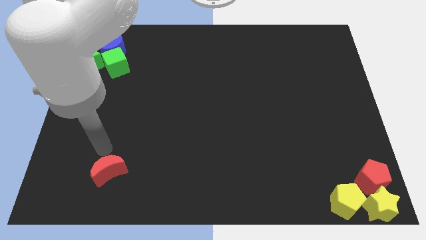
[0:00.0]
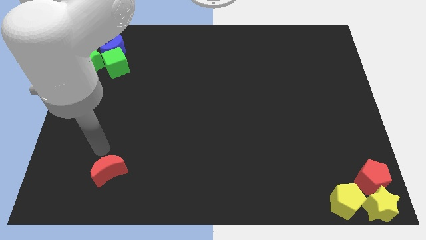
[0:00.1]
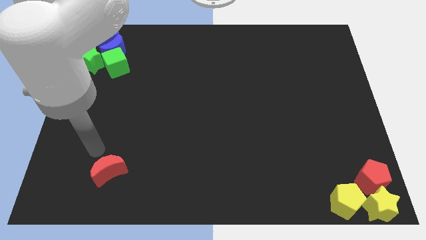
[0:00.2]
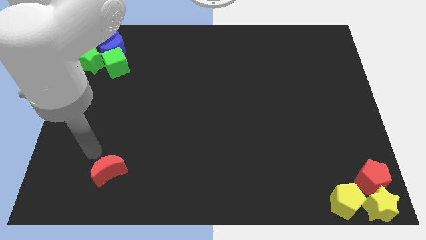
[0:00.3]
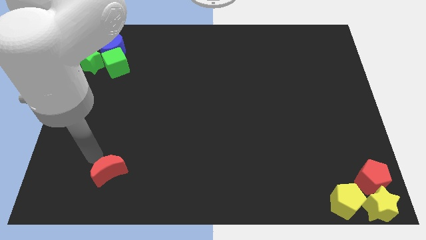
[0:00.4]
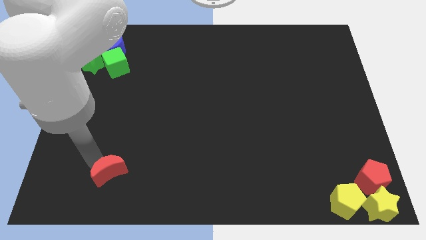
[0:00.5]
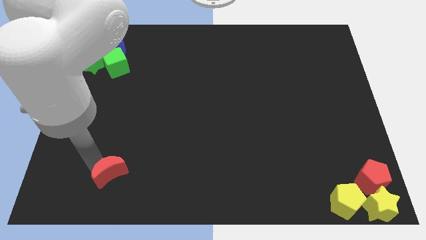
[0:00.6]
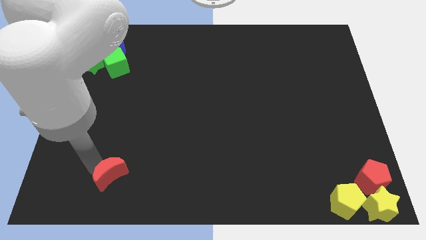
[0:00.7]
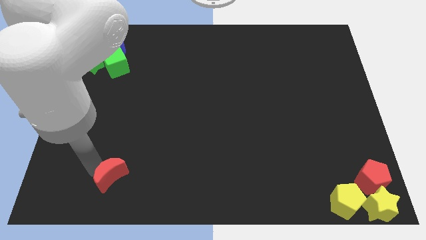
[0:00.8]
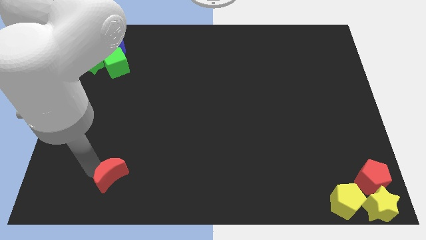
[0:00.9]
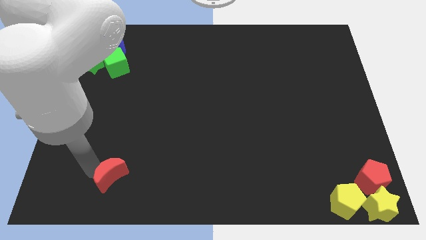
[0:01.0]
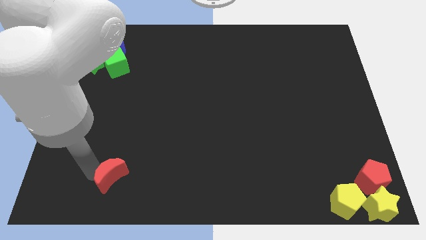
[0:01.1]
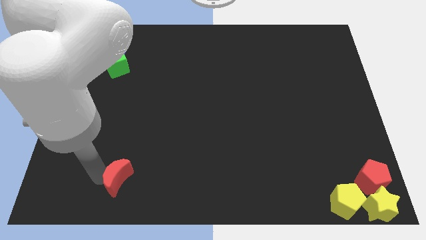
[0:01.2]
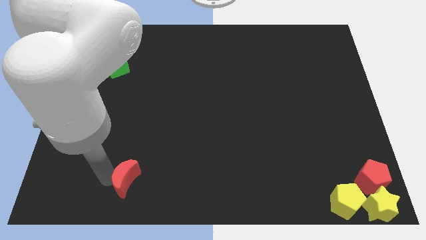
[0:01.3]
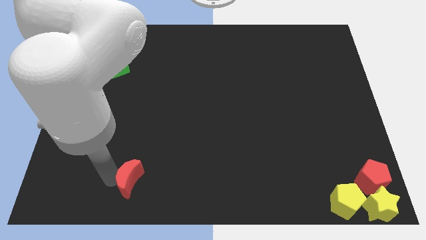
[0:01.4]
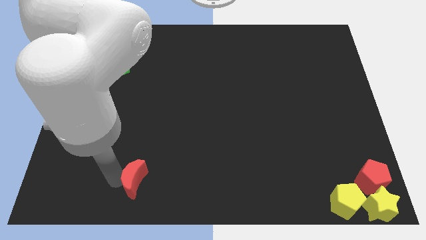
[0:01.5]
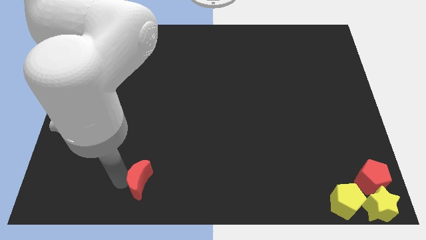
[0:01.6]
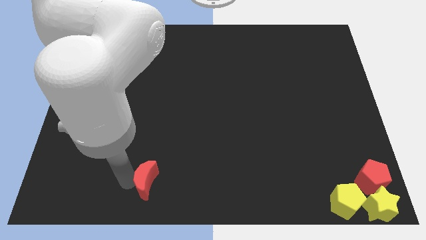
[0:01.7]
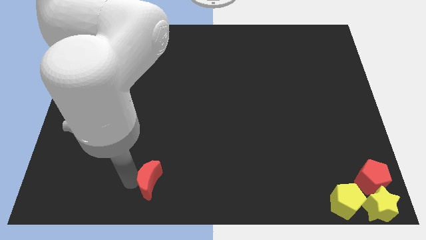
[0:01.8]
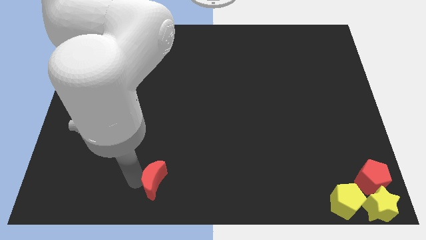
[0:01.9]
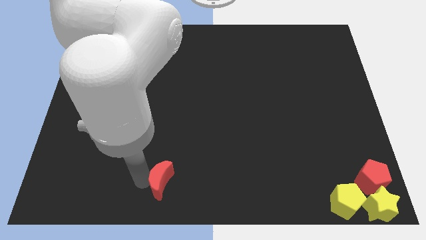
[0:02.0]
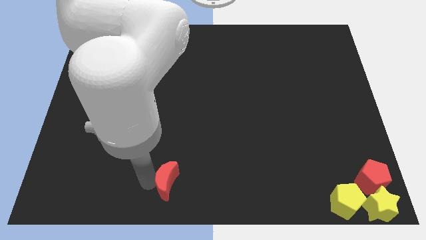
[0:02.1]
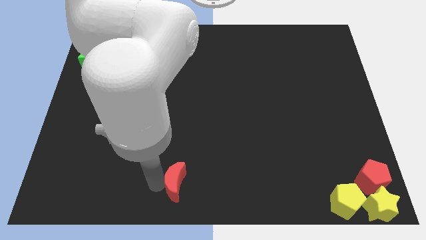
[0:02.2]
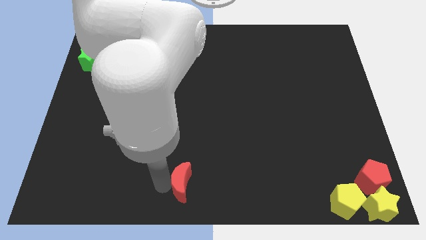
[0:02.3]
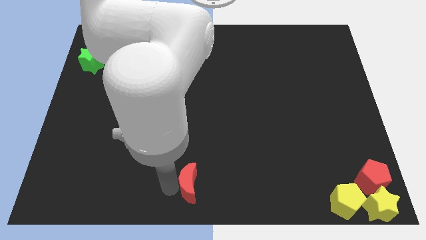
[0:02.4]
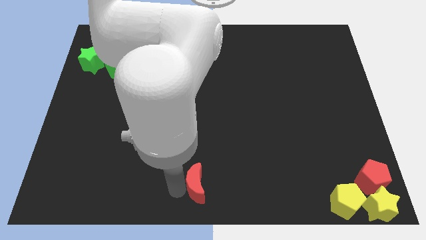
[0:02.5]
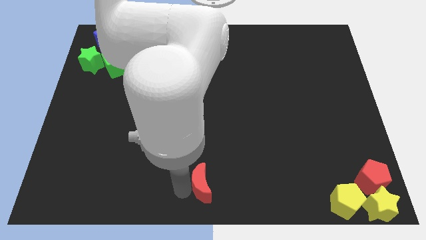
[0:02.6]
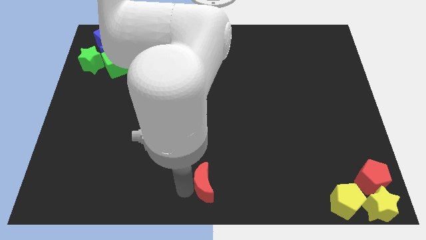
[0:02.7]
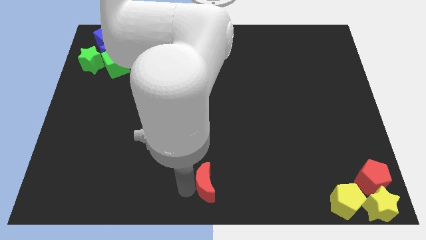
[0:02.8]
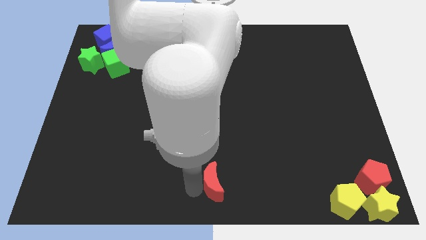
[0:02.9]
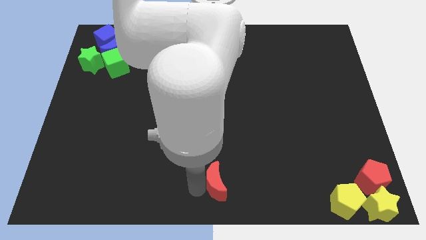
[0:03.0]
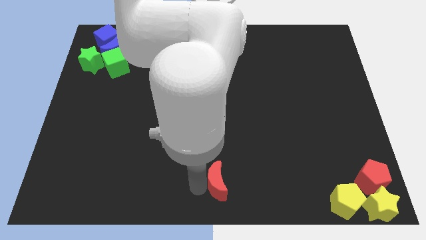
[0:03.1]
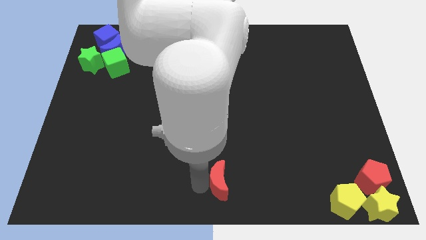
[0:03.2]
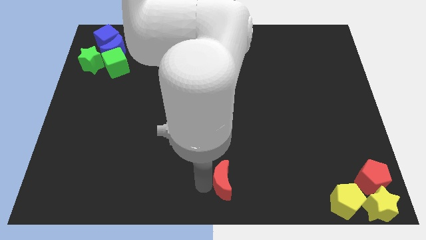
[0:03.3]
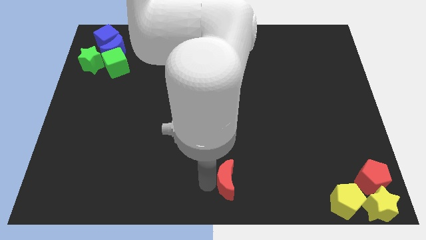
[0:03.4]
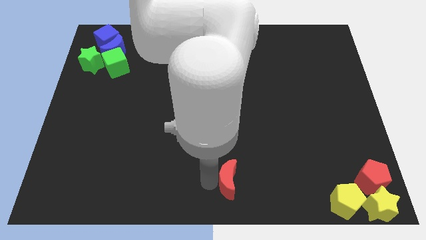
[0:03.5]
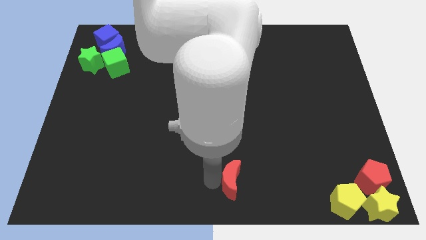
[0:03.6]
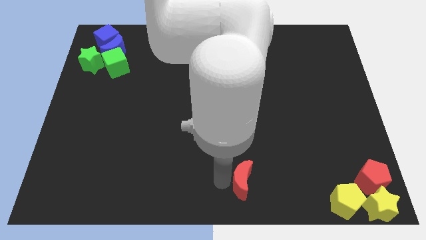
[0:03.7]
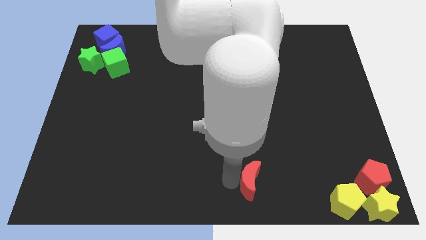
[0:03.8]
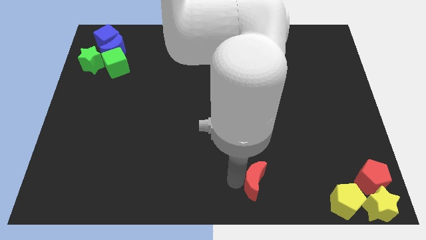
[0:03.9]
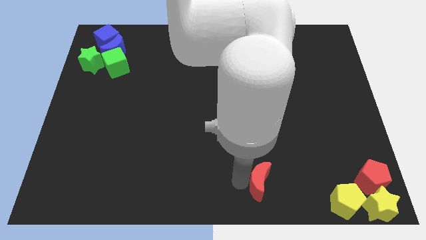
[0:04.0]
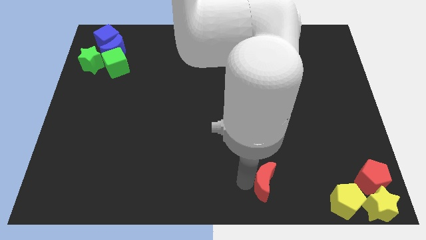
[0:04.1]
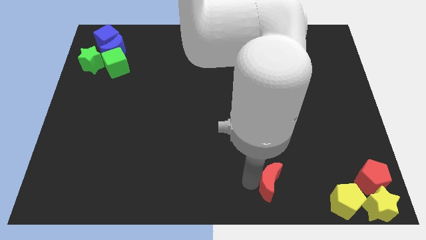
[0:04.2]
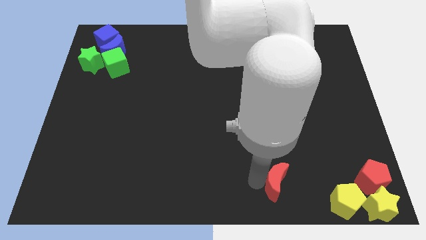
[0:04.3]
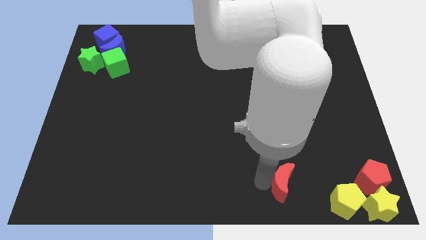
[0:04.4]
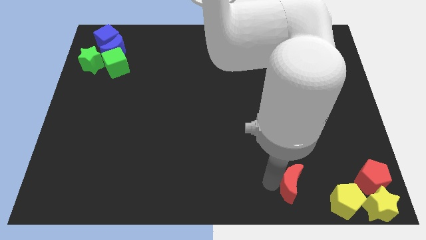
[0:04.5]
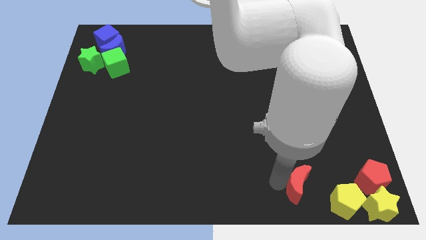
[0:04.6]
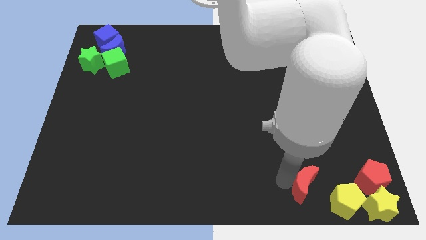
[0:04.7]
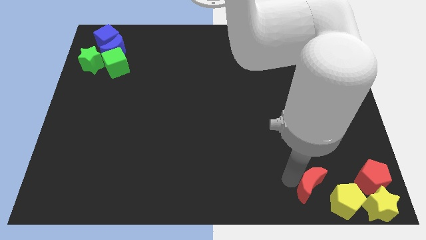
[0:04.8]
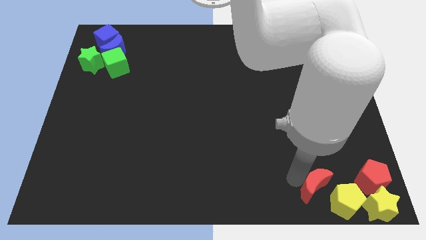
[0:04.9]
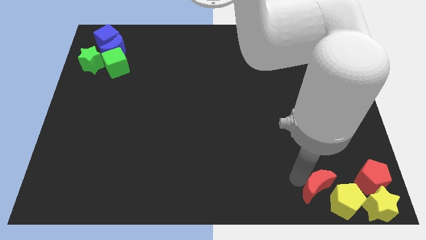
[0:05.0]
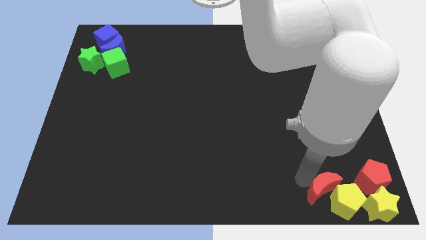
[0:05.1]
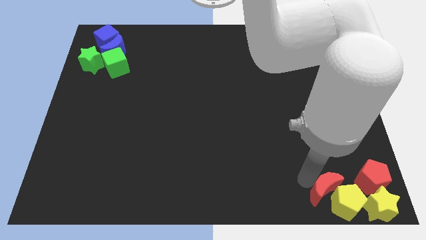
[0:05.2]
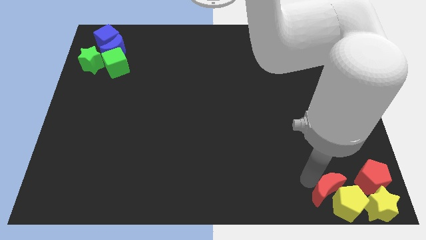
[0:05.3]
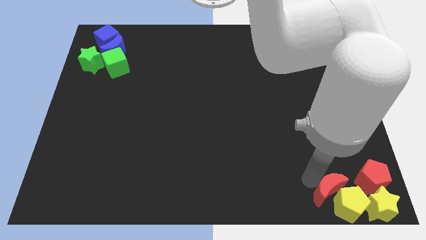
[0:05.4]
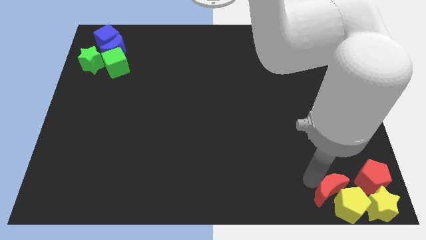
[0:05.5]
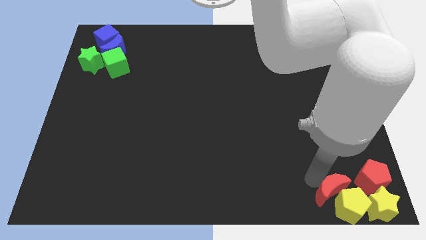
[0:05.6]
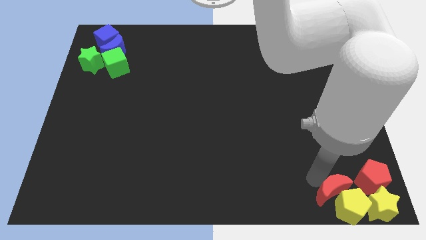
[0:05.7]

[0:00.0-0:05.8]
push the red moon into a group of blocks

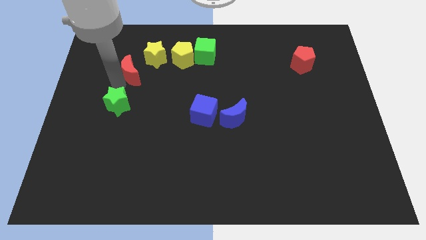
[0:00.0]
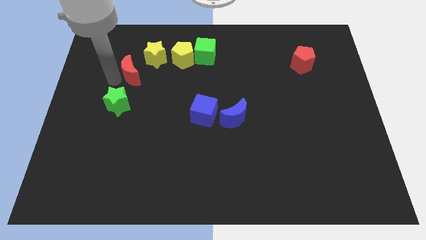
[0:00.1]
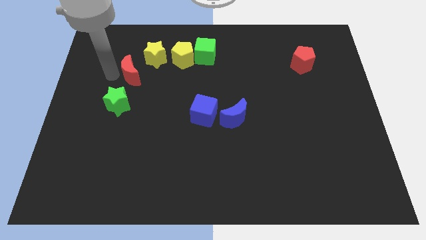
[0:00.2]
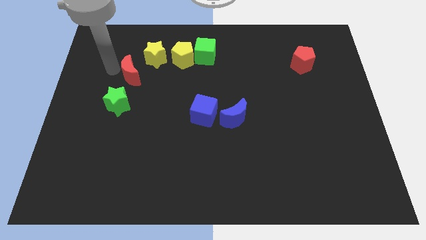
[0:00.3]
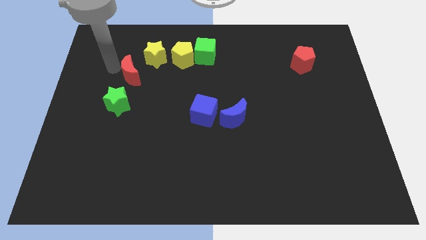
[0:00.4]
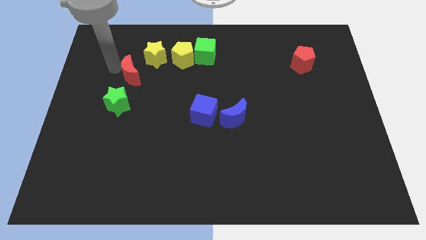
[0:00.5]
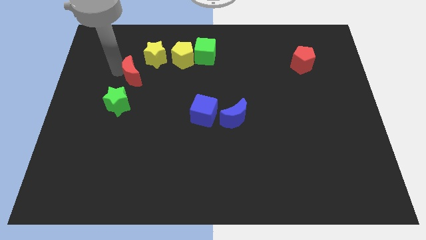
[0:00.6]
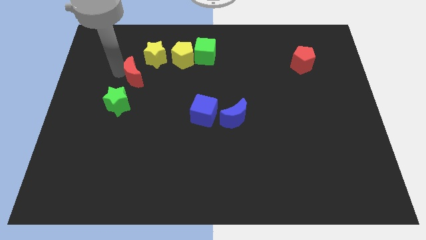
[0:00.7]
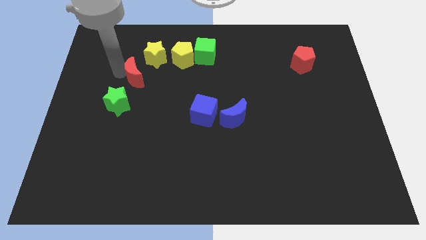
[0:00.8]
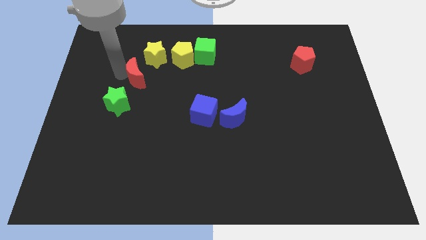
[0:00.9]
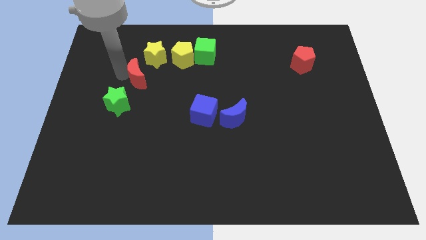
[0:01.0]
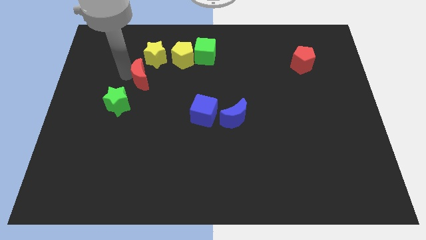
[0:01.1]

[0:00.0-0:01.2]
place red moon in between stars

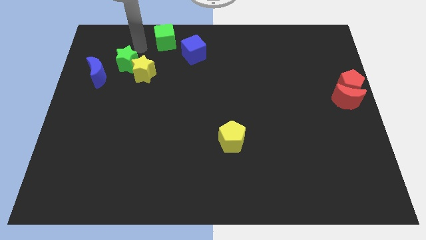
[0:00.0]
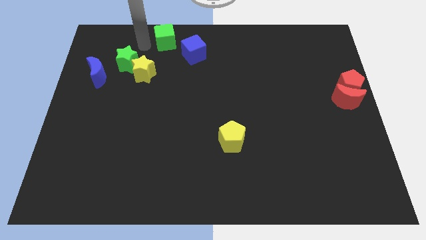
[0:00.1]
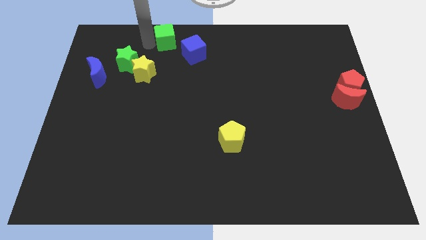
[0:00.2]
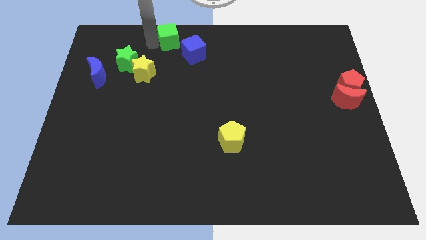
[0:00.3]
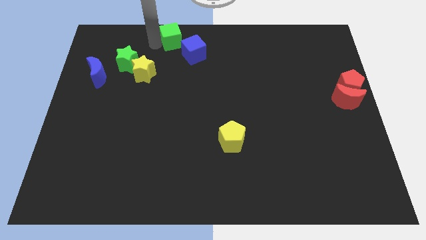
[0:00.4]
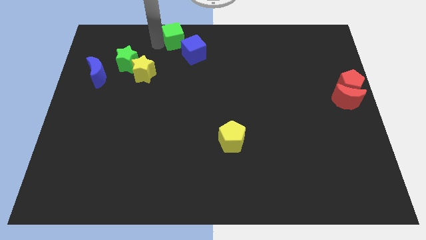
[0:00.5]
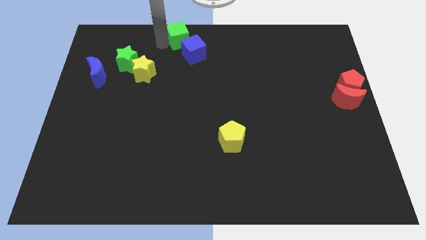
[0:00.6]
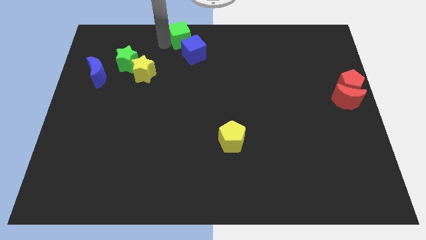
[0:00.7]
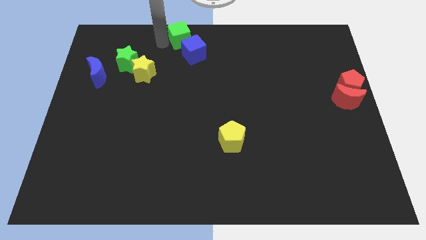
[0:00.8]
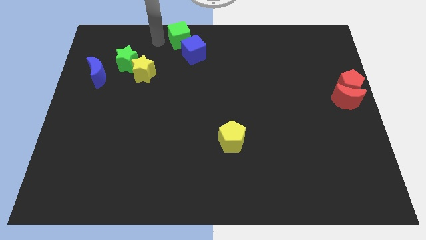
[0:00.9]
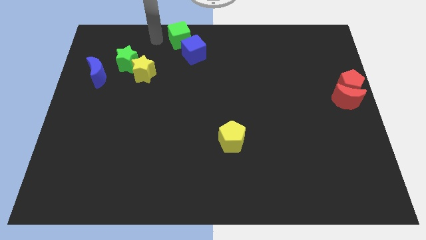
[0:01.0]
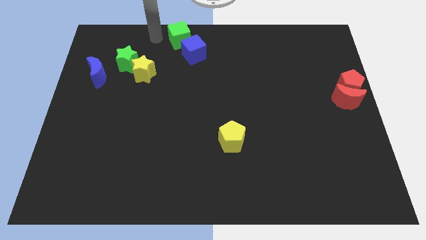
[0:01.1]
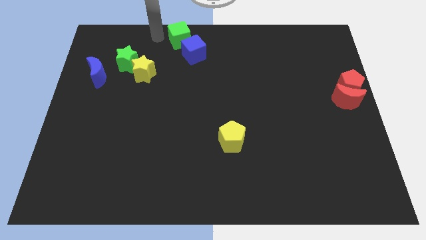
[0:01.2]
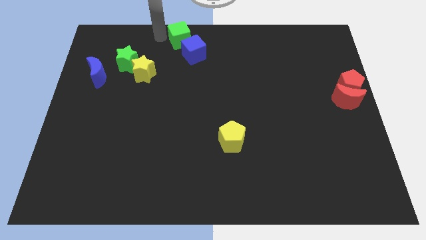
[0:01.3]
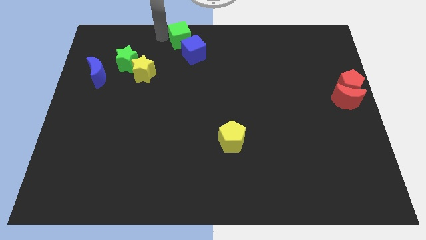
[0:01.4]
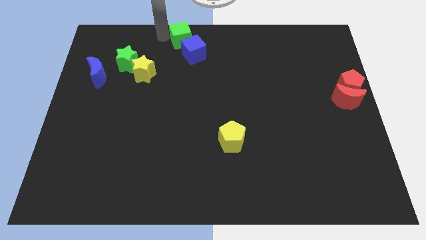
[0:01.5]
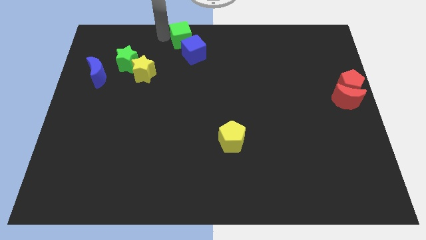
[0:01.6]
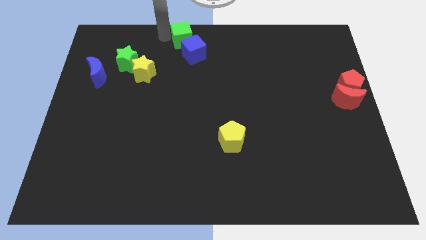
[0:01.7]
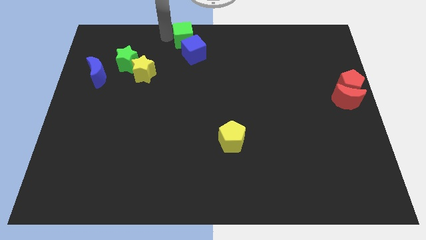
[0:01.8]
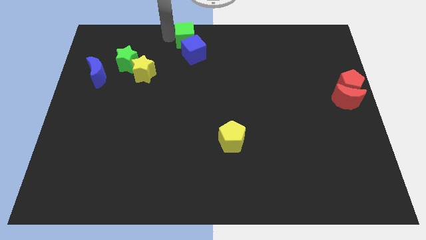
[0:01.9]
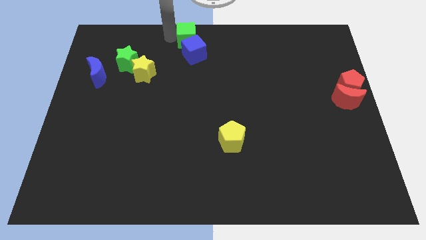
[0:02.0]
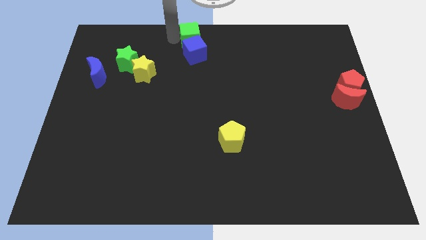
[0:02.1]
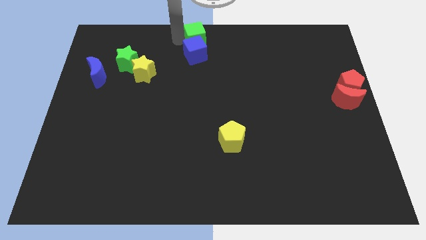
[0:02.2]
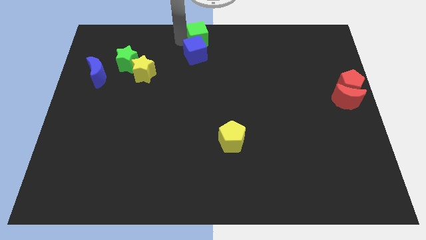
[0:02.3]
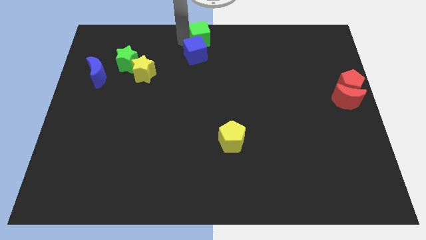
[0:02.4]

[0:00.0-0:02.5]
place the green cube above the blue cube
